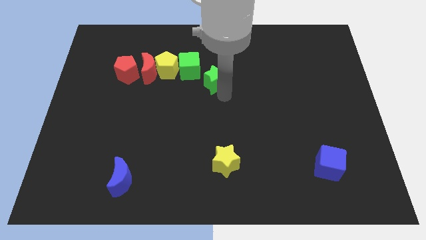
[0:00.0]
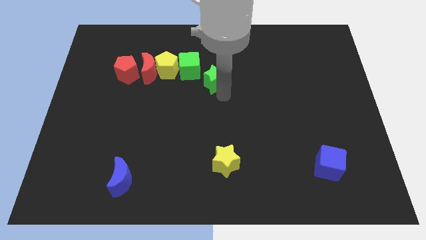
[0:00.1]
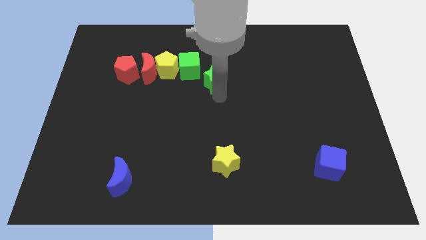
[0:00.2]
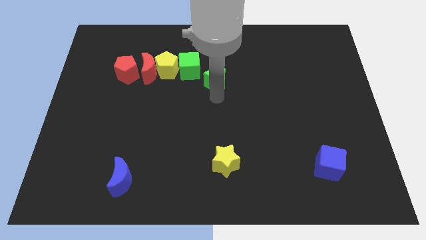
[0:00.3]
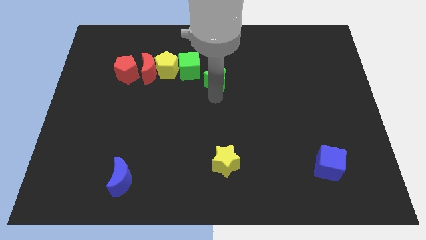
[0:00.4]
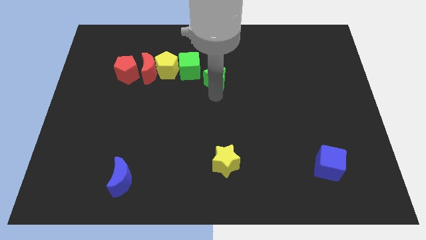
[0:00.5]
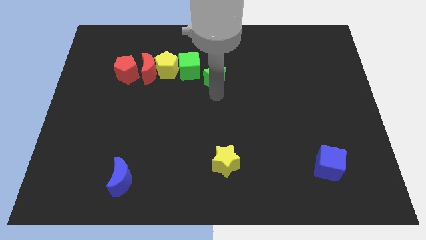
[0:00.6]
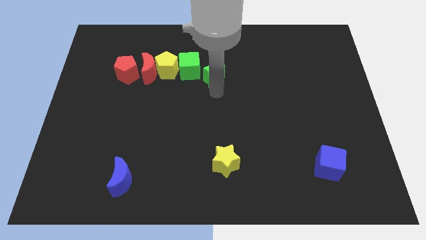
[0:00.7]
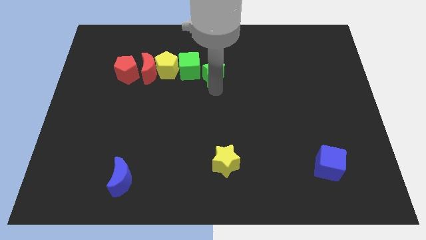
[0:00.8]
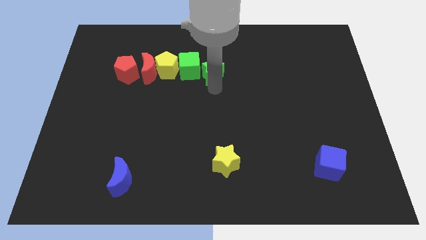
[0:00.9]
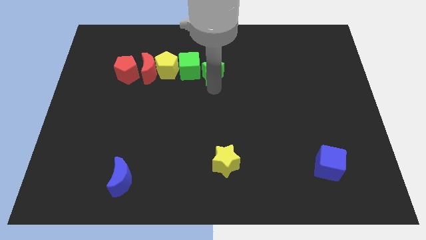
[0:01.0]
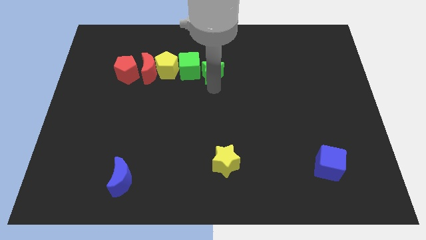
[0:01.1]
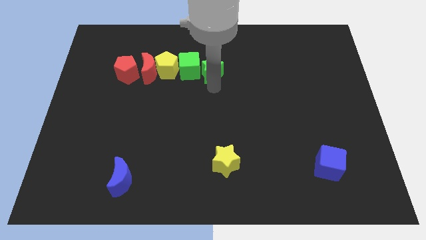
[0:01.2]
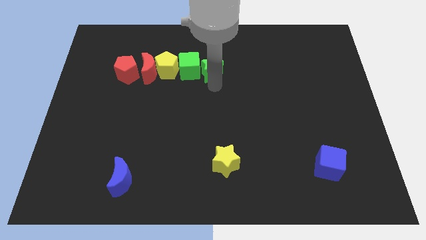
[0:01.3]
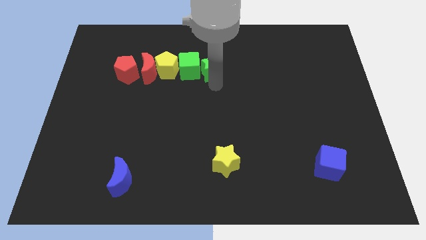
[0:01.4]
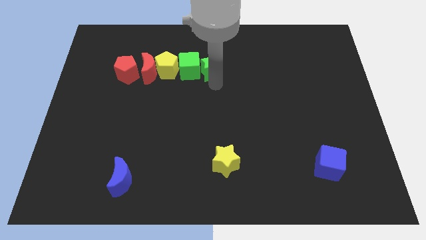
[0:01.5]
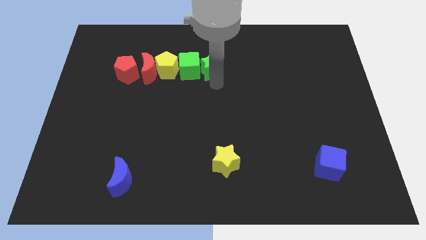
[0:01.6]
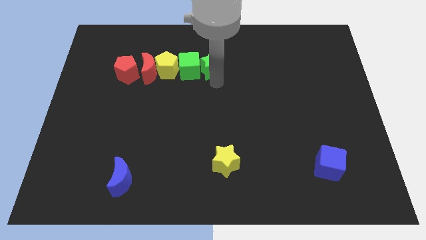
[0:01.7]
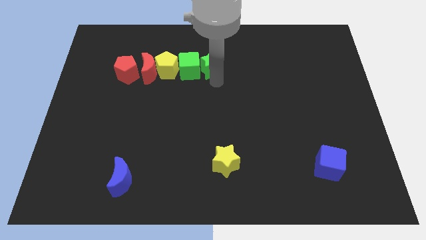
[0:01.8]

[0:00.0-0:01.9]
place the green star to the right of the green cube

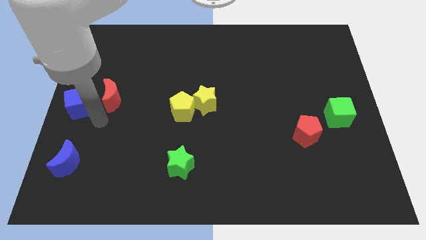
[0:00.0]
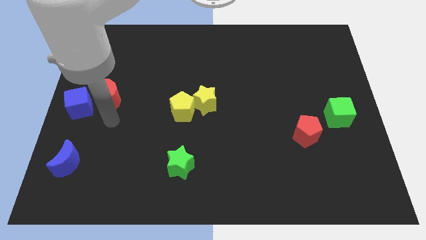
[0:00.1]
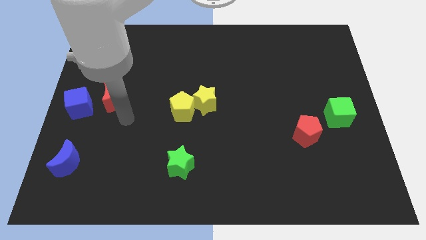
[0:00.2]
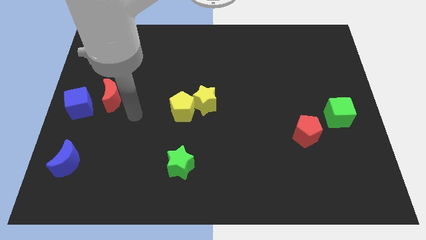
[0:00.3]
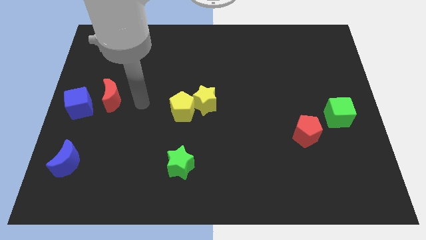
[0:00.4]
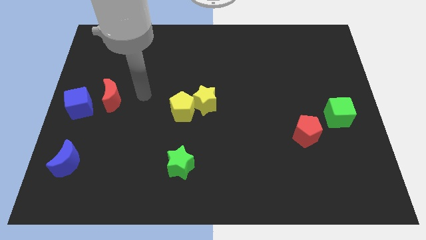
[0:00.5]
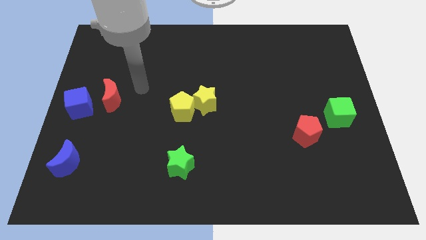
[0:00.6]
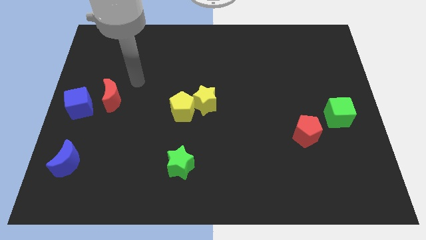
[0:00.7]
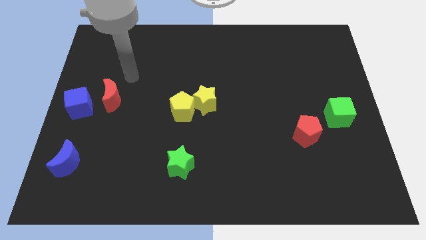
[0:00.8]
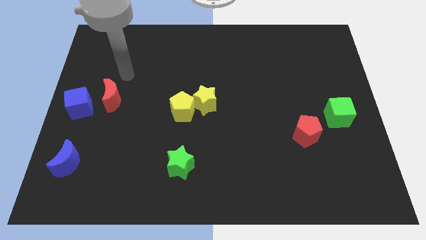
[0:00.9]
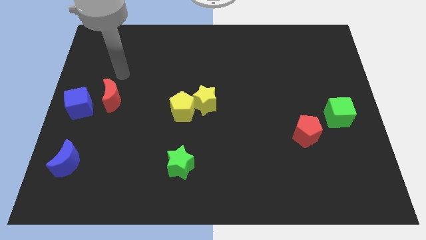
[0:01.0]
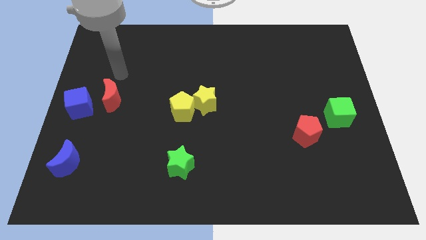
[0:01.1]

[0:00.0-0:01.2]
move your hand towards right side of the red crescent

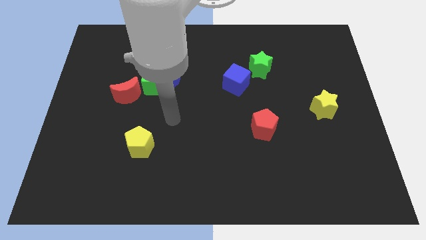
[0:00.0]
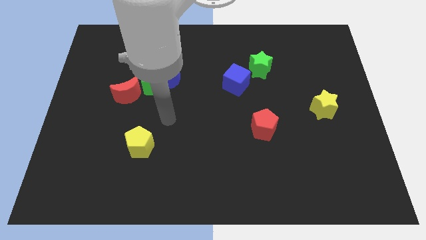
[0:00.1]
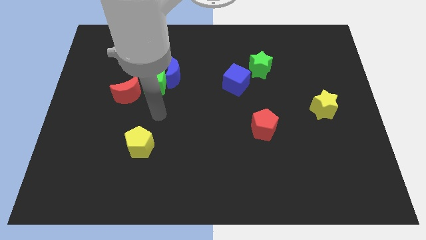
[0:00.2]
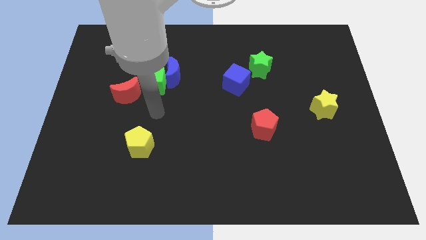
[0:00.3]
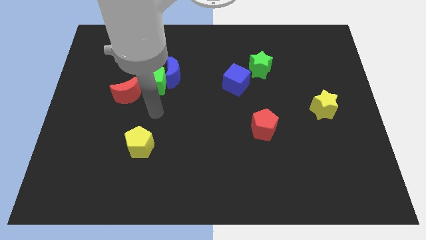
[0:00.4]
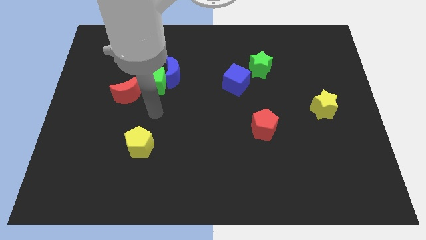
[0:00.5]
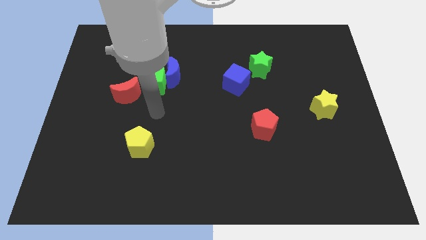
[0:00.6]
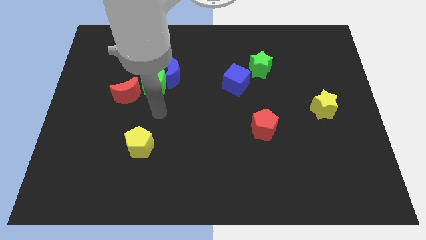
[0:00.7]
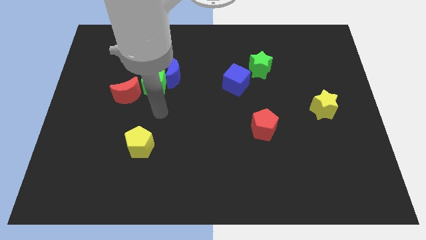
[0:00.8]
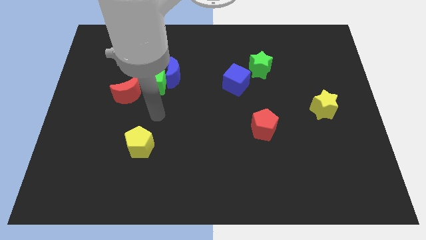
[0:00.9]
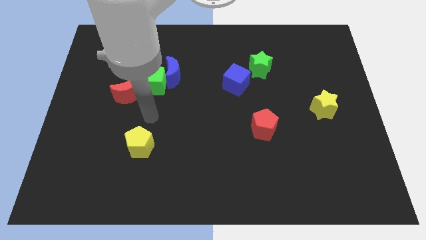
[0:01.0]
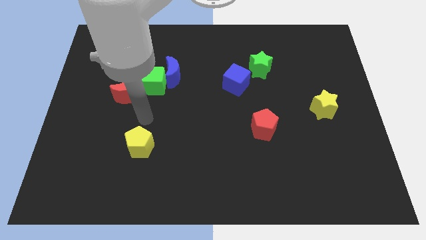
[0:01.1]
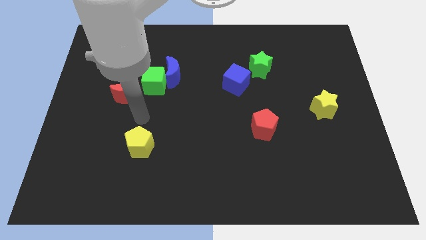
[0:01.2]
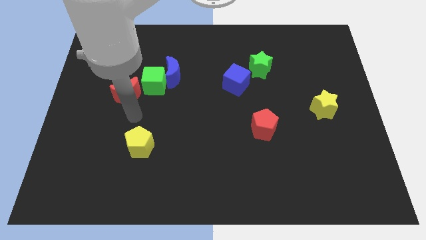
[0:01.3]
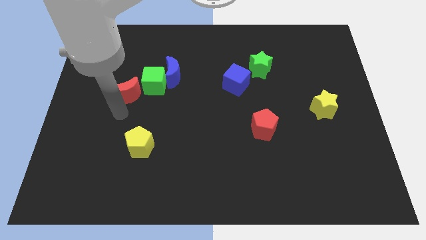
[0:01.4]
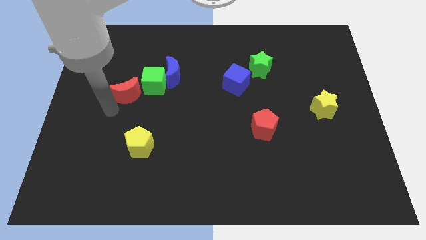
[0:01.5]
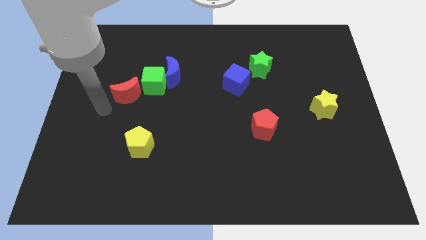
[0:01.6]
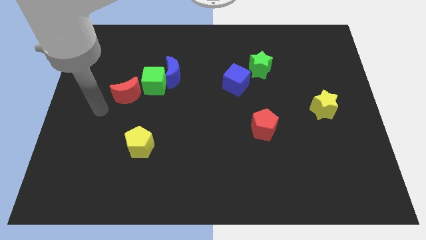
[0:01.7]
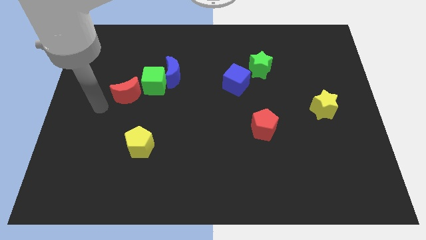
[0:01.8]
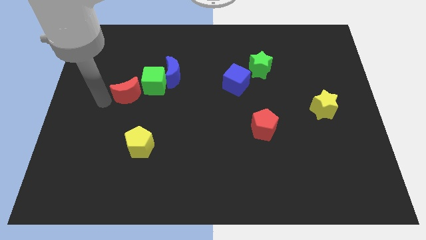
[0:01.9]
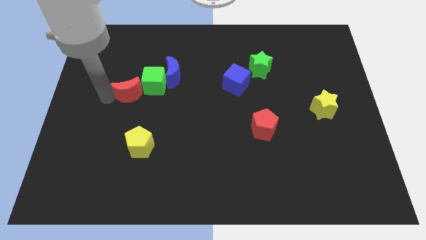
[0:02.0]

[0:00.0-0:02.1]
move your arm towards red crescent

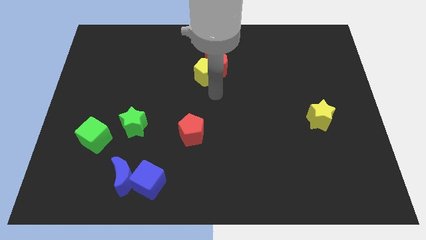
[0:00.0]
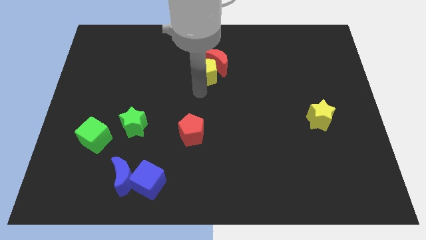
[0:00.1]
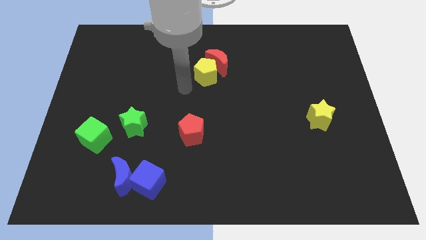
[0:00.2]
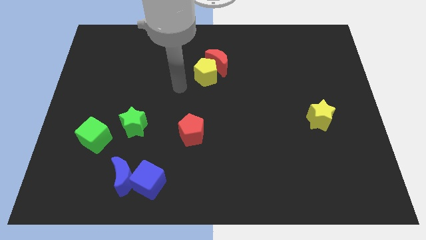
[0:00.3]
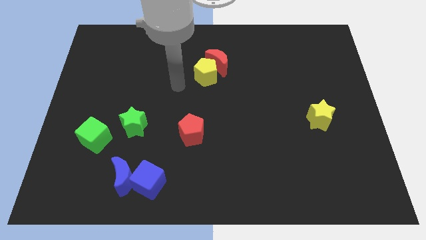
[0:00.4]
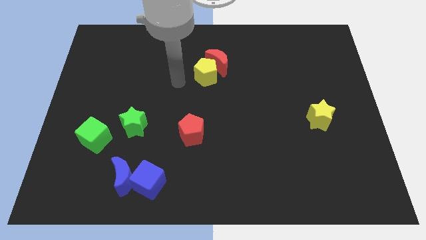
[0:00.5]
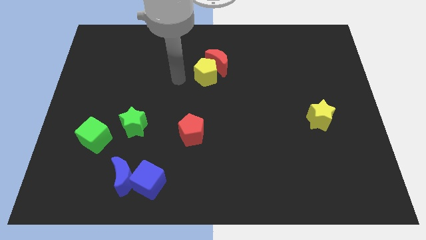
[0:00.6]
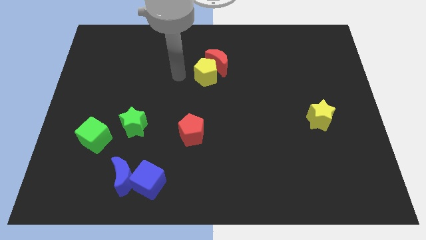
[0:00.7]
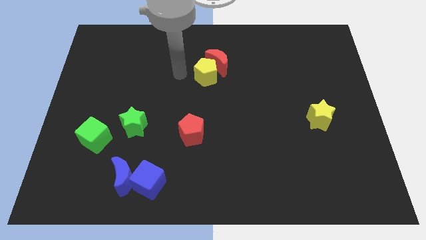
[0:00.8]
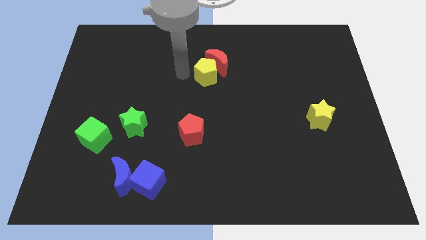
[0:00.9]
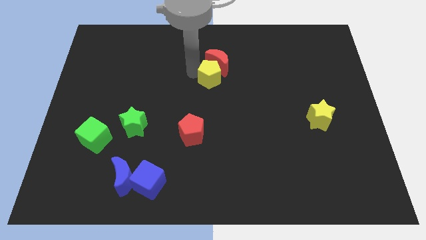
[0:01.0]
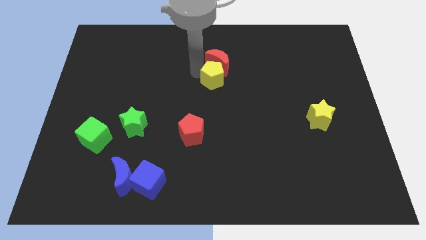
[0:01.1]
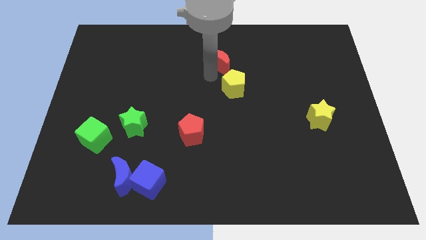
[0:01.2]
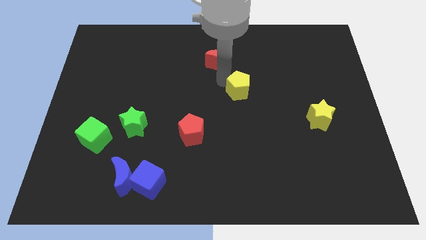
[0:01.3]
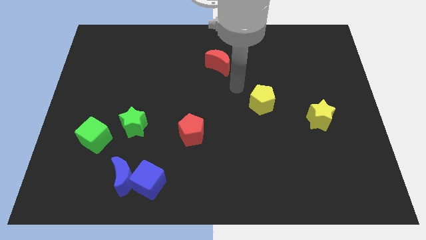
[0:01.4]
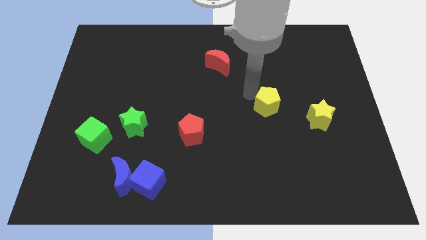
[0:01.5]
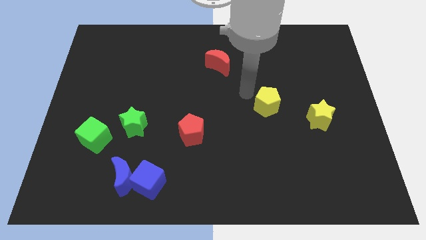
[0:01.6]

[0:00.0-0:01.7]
separate the yellow pentagon from the red crescent

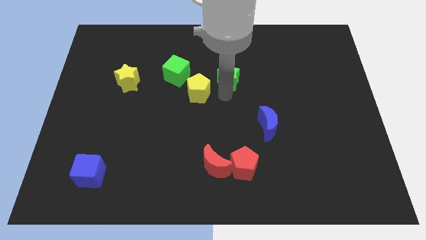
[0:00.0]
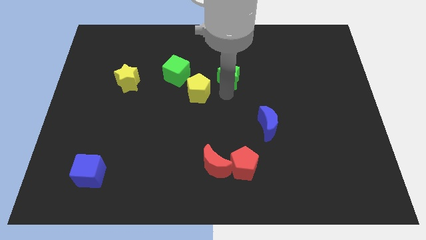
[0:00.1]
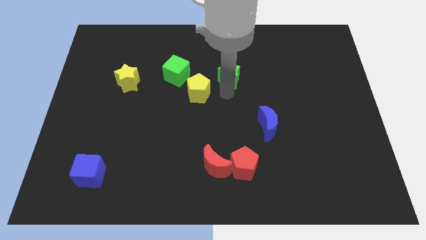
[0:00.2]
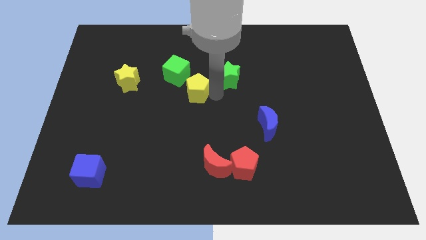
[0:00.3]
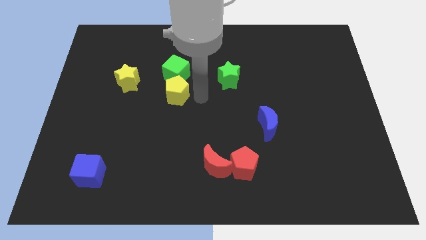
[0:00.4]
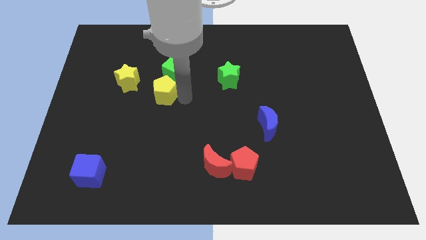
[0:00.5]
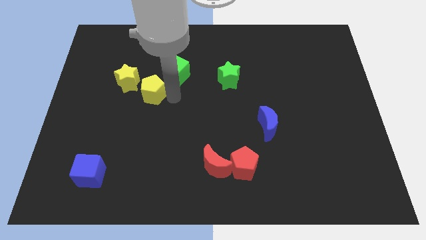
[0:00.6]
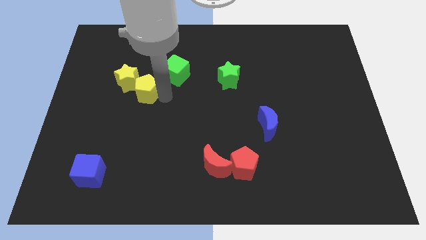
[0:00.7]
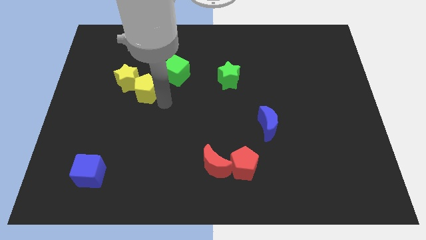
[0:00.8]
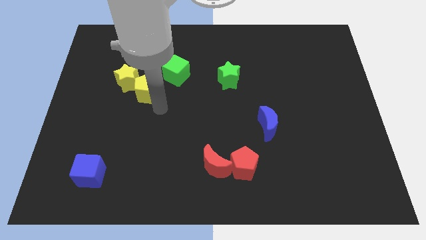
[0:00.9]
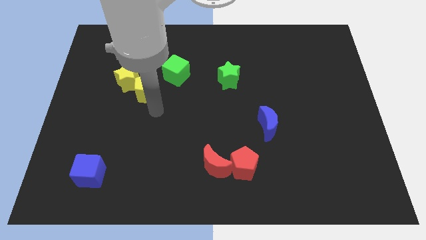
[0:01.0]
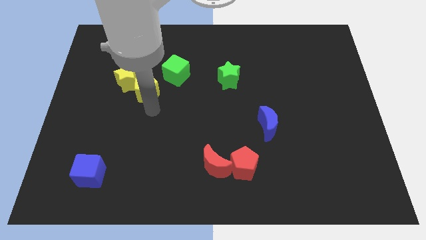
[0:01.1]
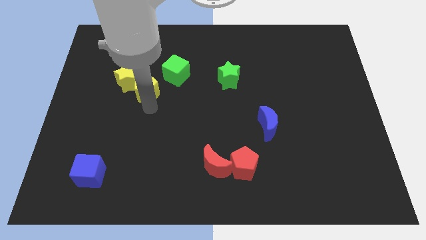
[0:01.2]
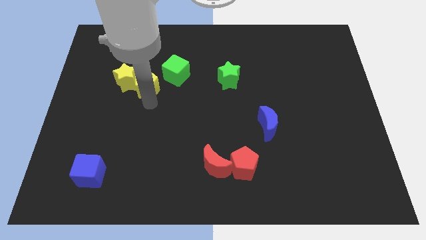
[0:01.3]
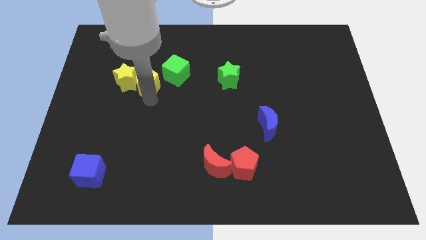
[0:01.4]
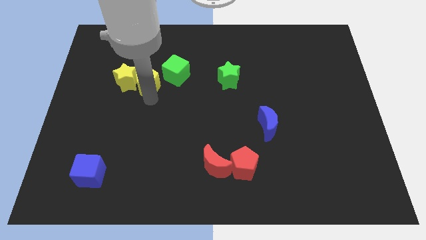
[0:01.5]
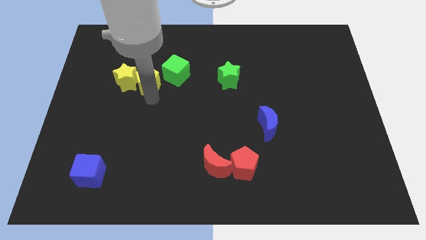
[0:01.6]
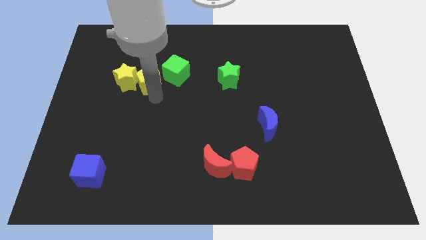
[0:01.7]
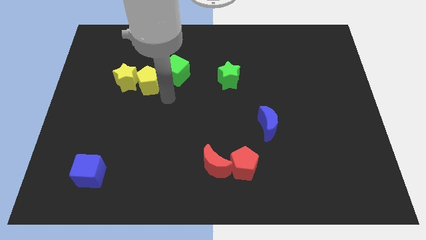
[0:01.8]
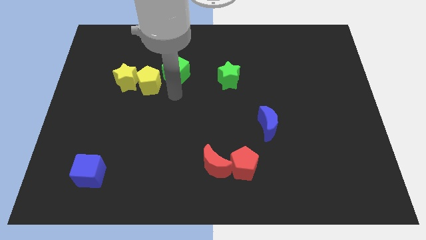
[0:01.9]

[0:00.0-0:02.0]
place yellow pentagon to the right of yellow star
